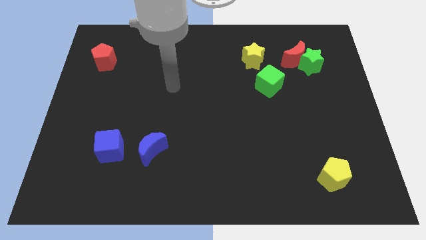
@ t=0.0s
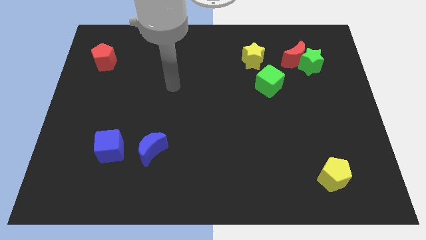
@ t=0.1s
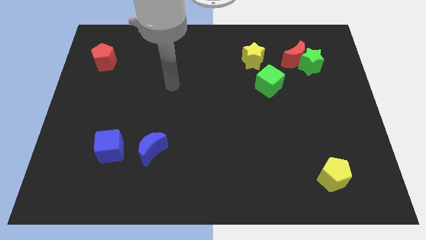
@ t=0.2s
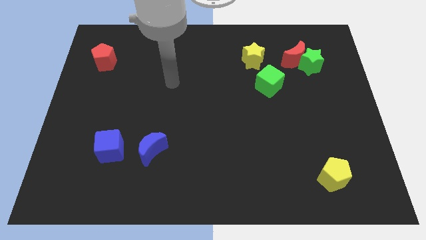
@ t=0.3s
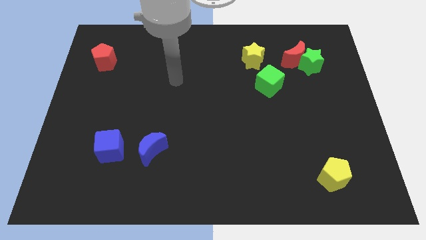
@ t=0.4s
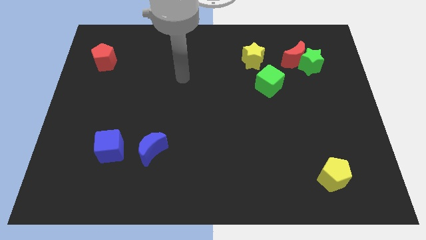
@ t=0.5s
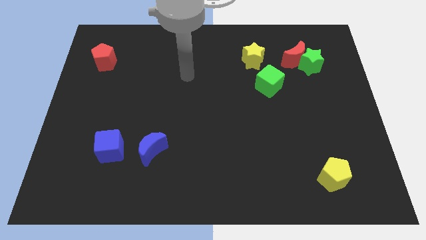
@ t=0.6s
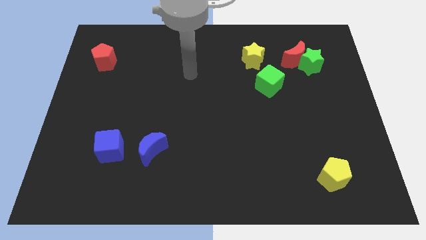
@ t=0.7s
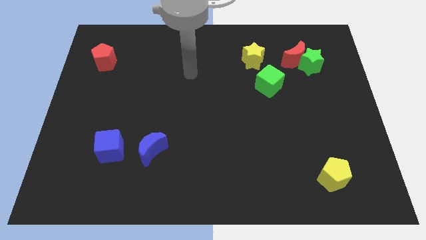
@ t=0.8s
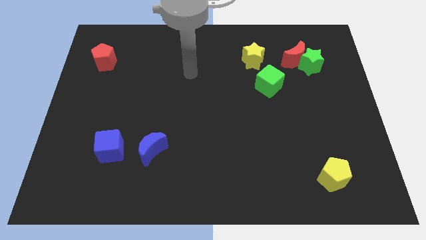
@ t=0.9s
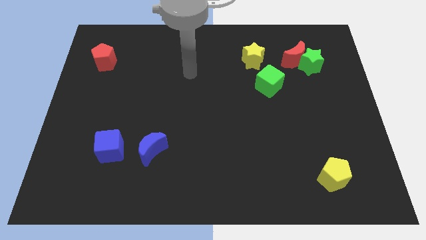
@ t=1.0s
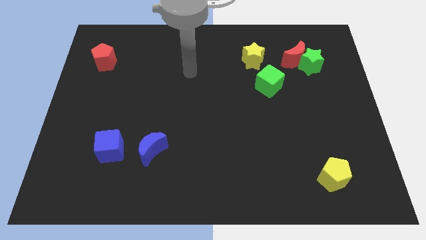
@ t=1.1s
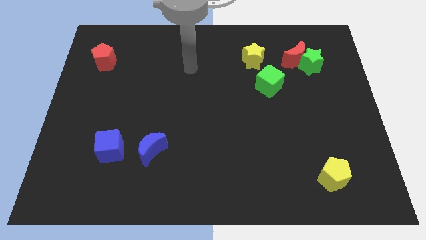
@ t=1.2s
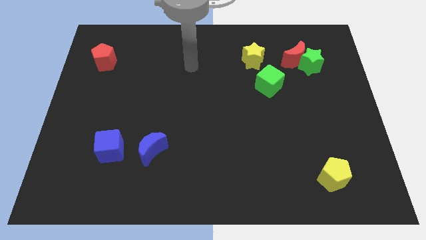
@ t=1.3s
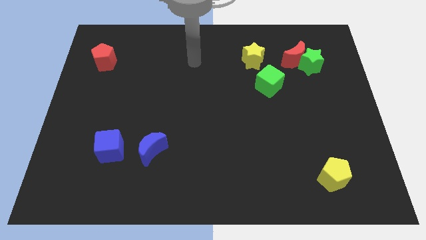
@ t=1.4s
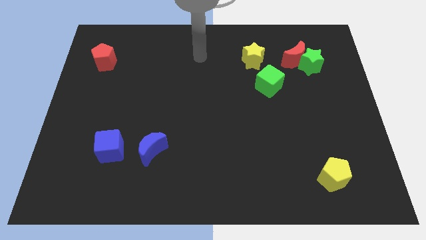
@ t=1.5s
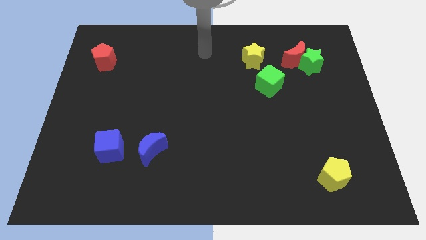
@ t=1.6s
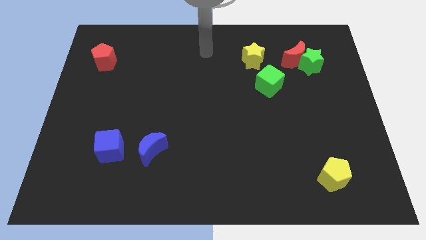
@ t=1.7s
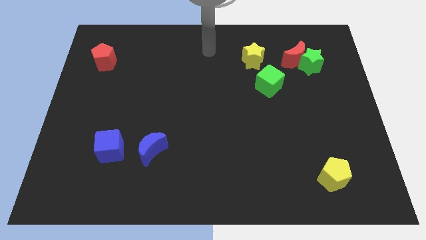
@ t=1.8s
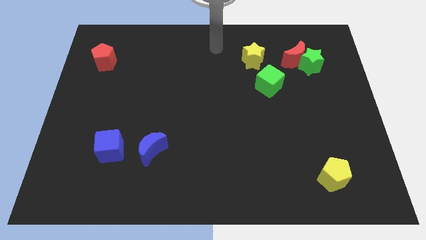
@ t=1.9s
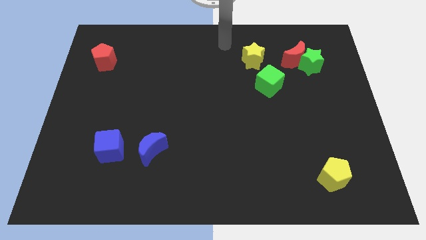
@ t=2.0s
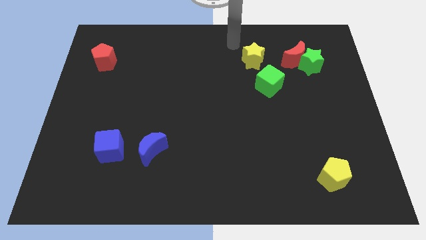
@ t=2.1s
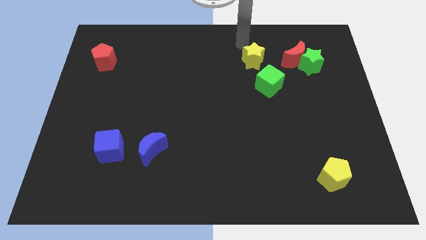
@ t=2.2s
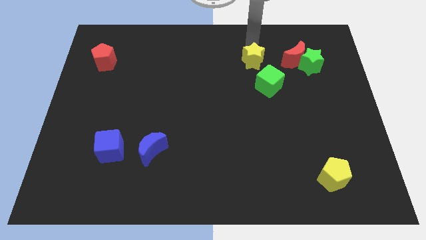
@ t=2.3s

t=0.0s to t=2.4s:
place the arm above the yellow star

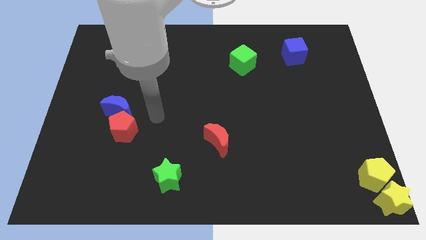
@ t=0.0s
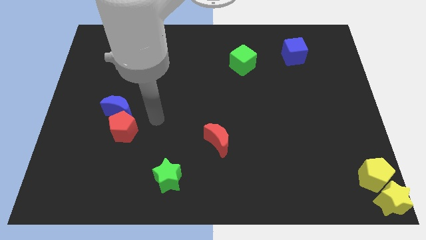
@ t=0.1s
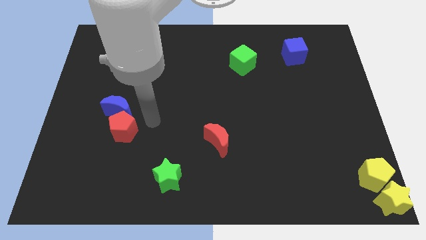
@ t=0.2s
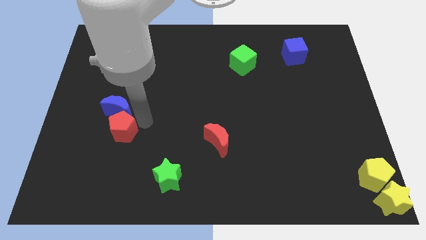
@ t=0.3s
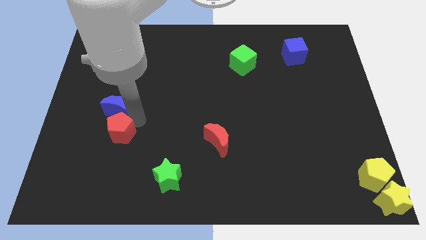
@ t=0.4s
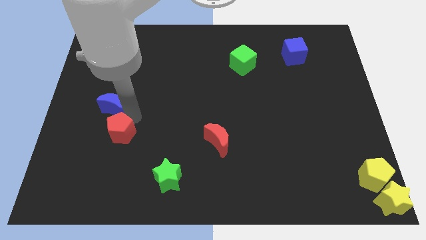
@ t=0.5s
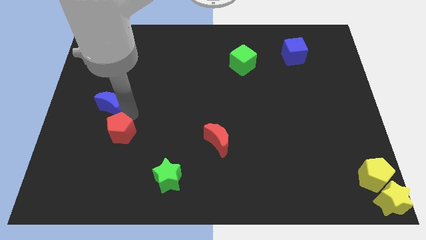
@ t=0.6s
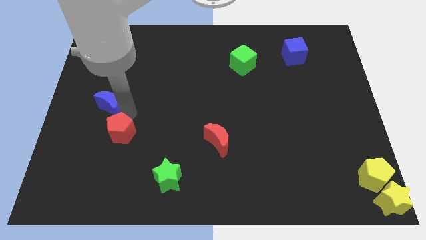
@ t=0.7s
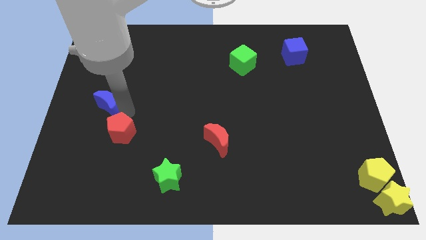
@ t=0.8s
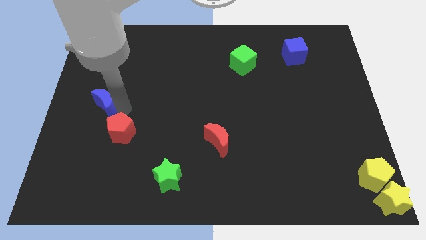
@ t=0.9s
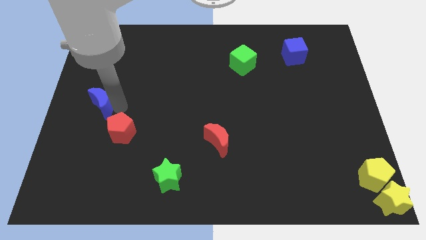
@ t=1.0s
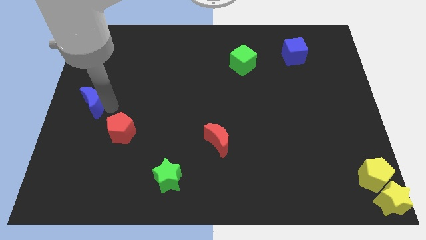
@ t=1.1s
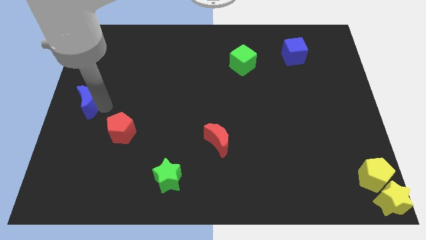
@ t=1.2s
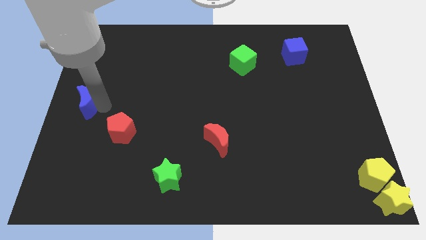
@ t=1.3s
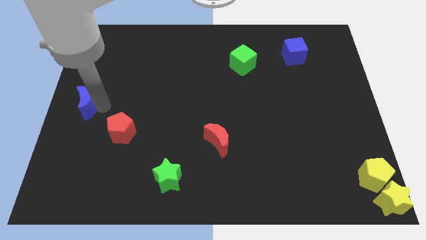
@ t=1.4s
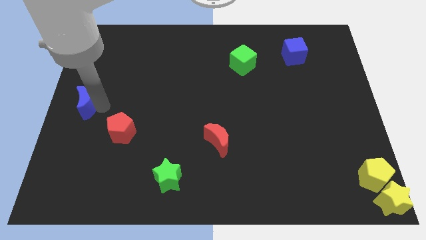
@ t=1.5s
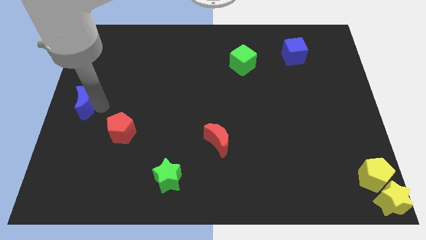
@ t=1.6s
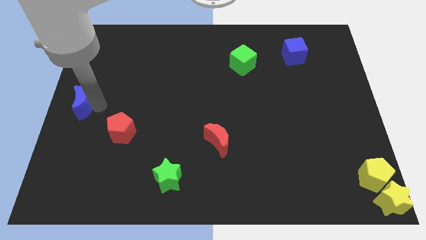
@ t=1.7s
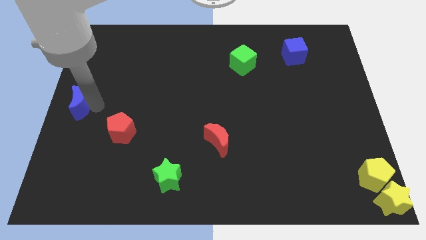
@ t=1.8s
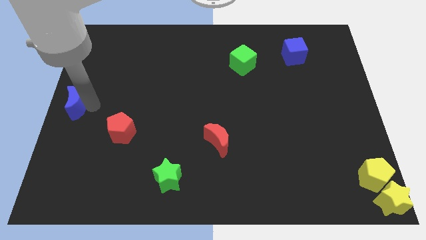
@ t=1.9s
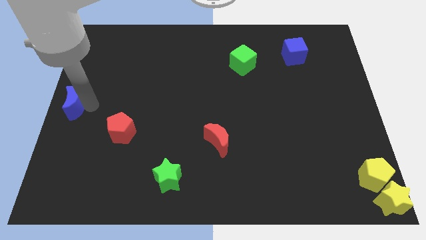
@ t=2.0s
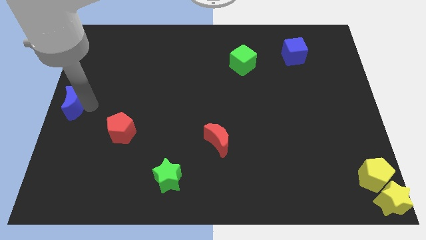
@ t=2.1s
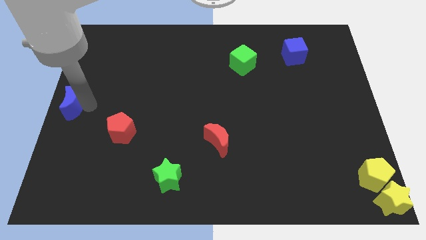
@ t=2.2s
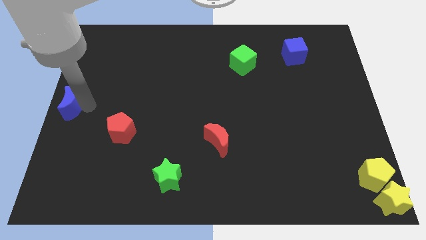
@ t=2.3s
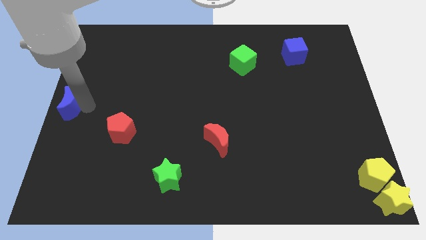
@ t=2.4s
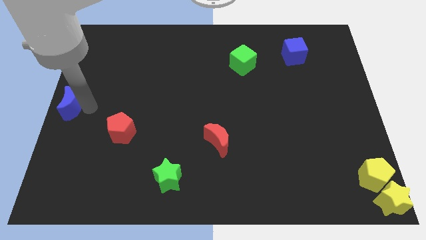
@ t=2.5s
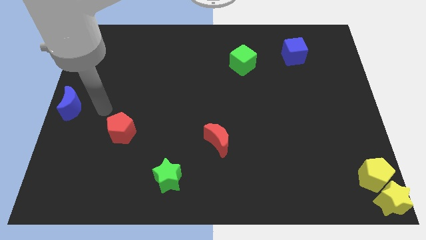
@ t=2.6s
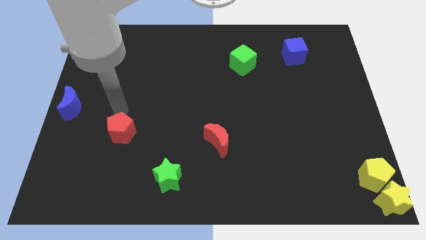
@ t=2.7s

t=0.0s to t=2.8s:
put the blue moon to the center left side of the board

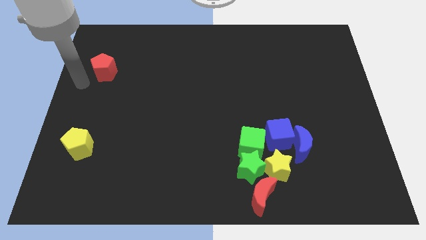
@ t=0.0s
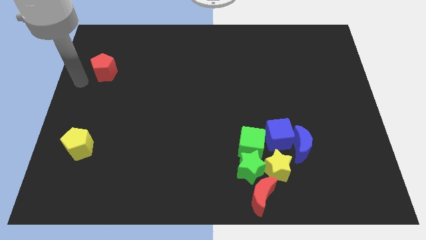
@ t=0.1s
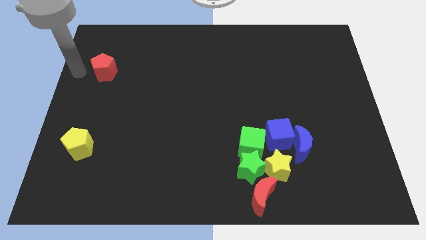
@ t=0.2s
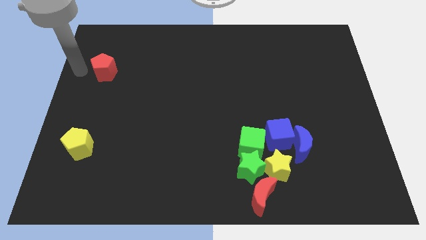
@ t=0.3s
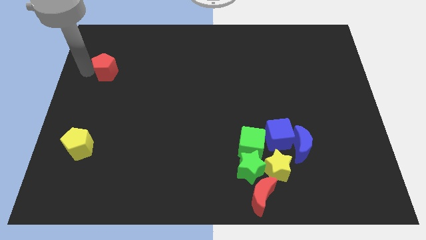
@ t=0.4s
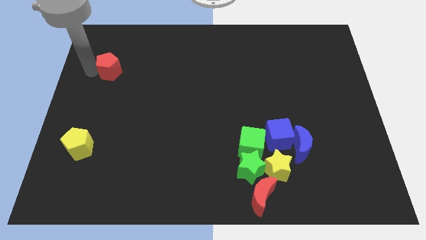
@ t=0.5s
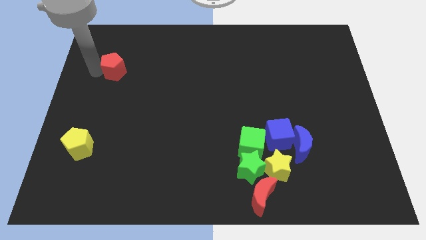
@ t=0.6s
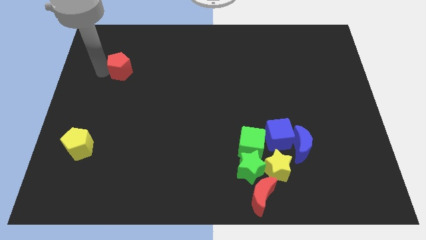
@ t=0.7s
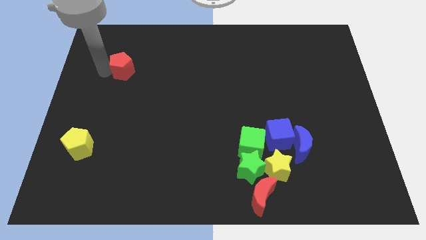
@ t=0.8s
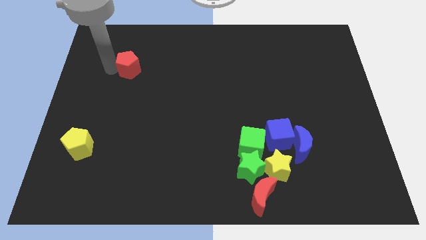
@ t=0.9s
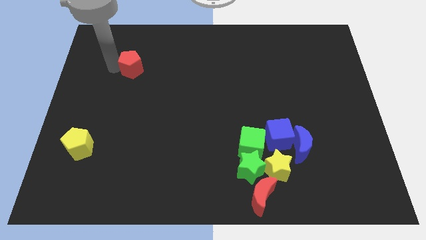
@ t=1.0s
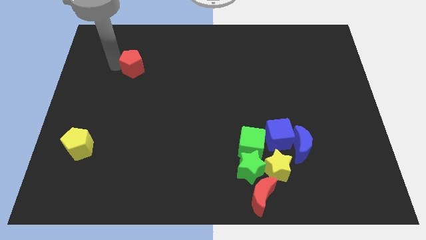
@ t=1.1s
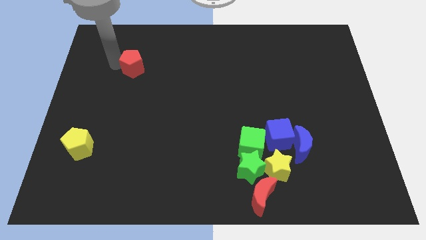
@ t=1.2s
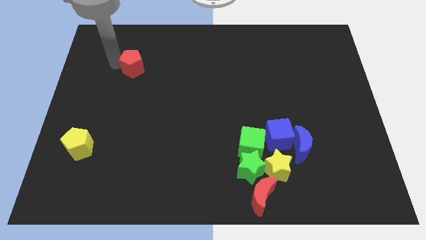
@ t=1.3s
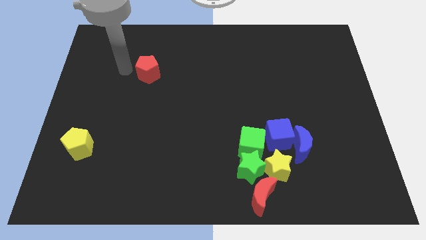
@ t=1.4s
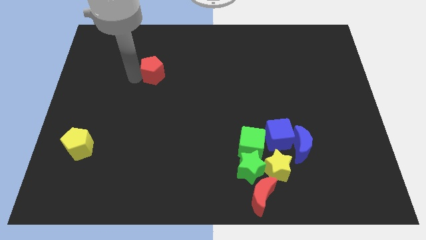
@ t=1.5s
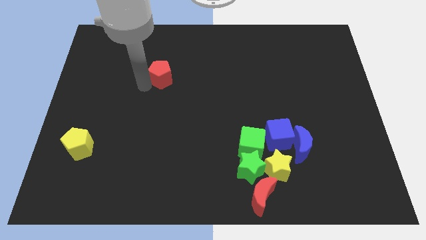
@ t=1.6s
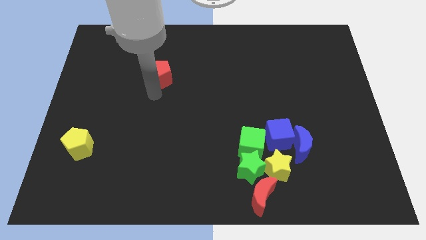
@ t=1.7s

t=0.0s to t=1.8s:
push the red pentagon to the center of the board

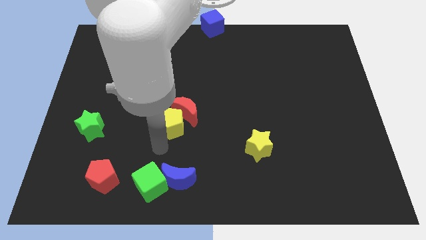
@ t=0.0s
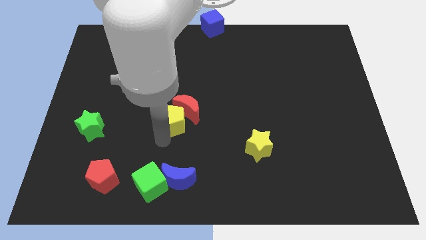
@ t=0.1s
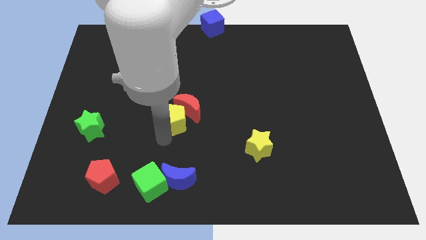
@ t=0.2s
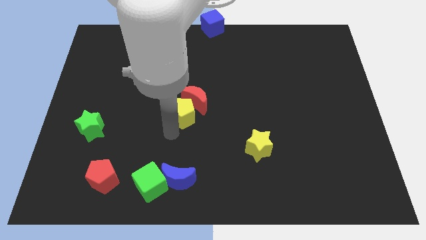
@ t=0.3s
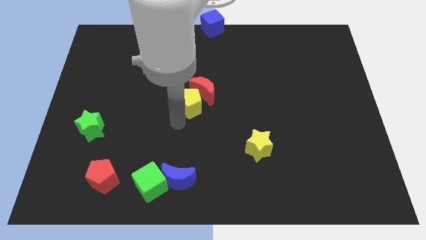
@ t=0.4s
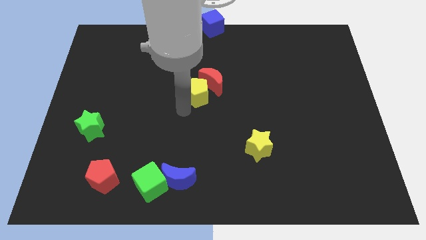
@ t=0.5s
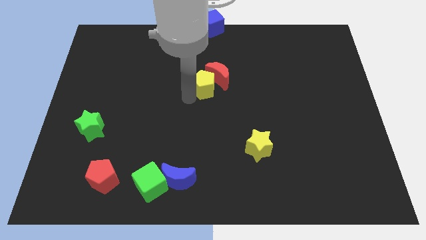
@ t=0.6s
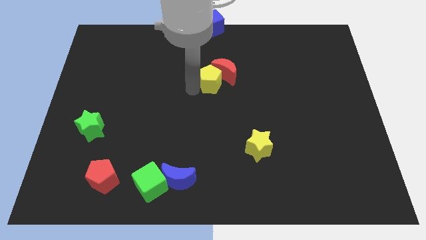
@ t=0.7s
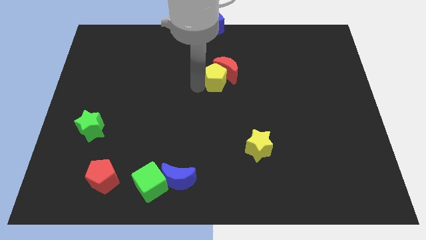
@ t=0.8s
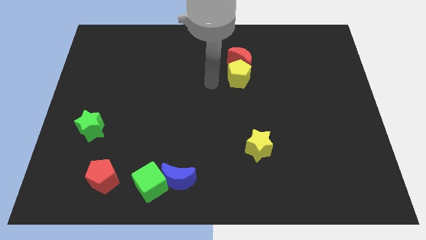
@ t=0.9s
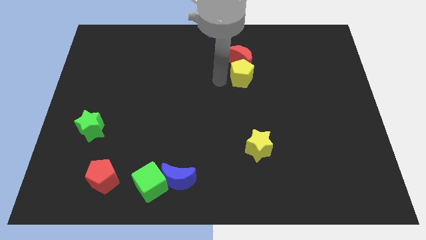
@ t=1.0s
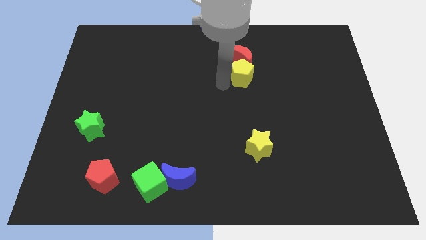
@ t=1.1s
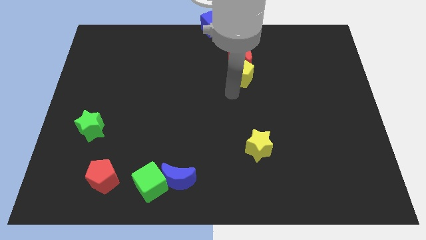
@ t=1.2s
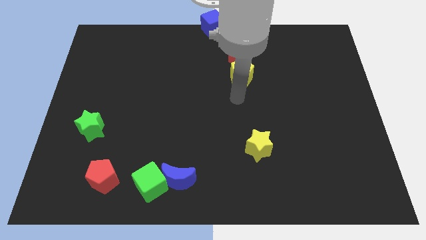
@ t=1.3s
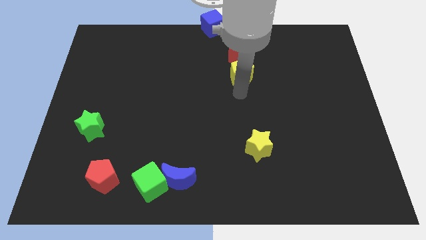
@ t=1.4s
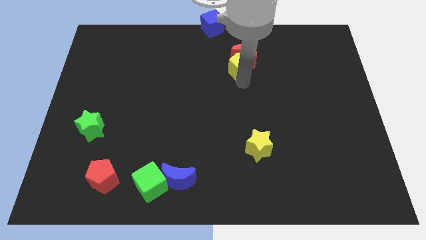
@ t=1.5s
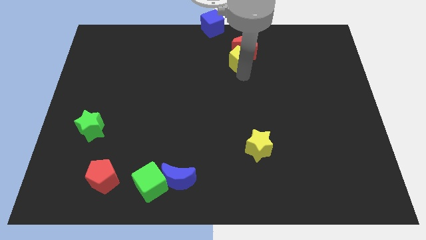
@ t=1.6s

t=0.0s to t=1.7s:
slightly push the red crescent up with the yellow star

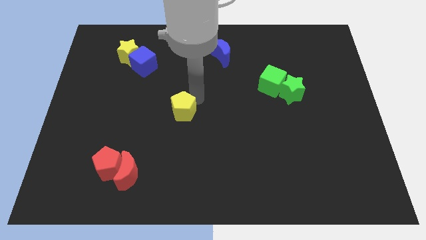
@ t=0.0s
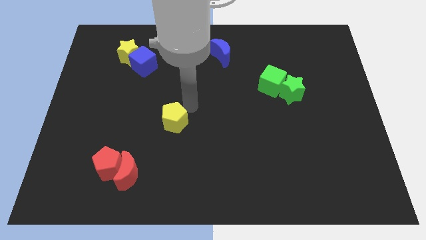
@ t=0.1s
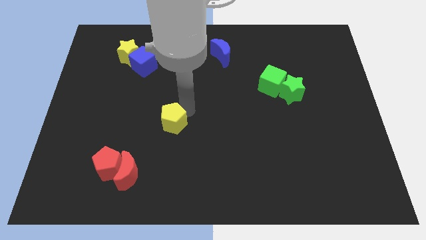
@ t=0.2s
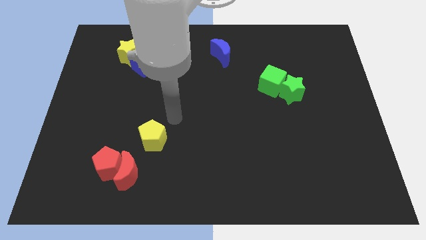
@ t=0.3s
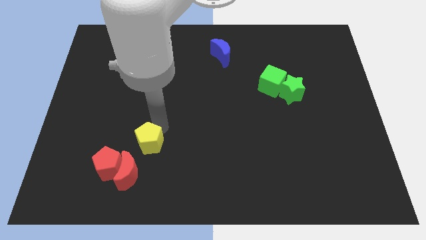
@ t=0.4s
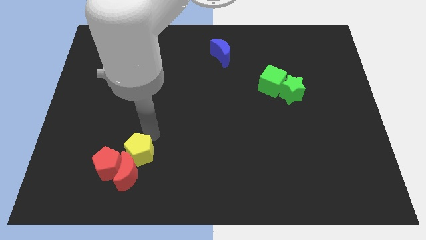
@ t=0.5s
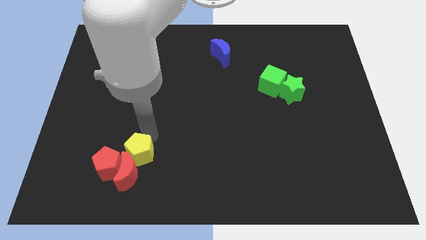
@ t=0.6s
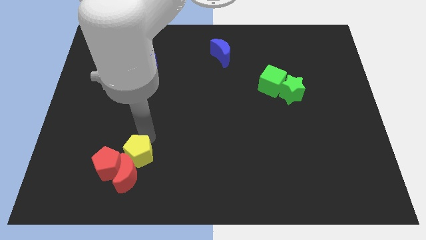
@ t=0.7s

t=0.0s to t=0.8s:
place the yellow pentagon at the top of red moon
